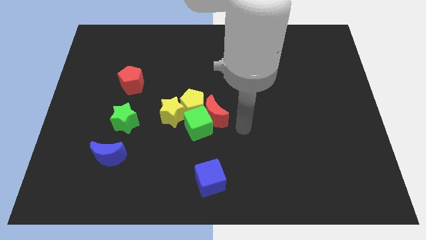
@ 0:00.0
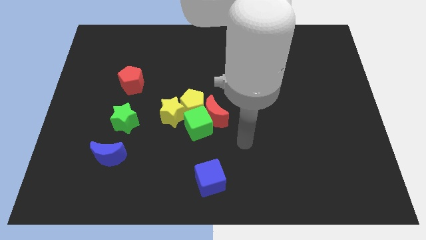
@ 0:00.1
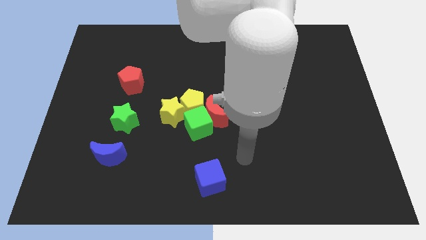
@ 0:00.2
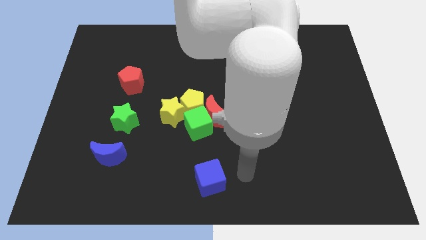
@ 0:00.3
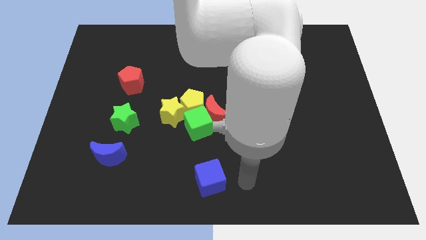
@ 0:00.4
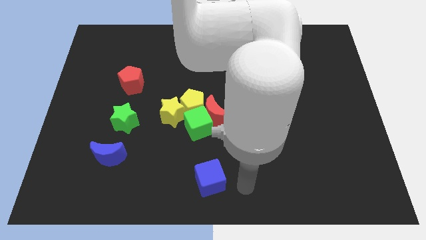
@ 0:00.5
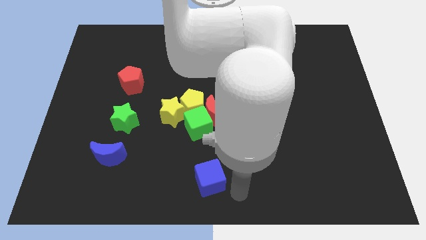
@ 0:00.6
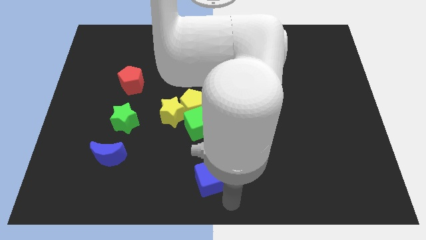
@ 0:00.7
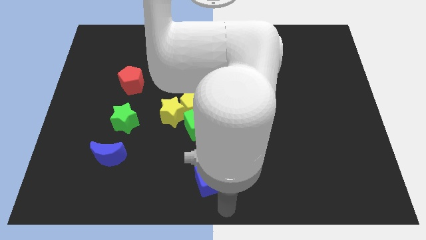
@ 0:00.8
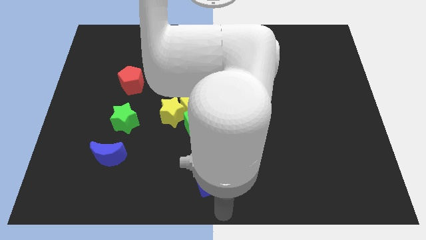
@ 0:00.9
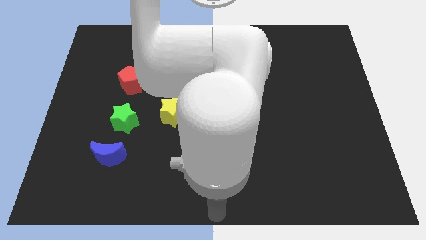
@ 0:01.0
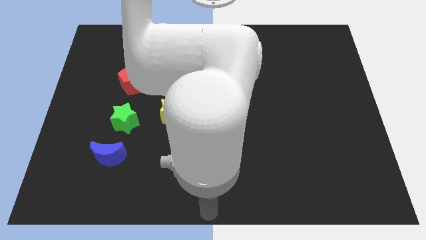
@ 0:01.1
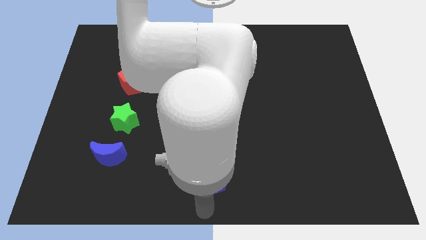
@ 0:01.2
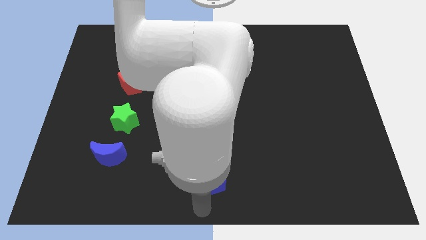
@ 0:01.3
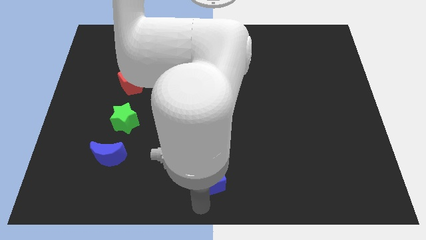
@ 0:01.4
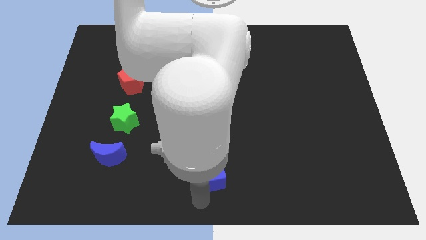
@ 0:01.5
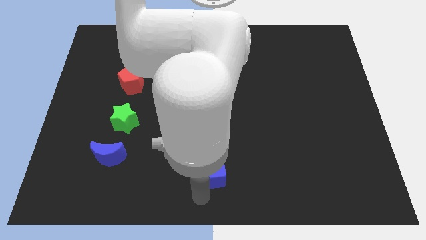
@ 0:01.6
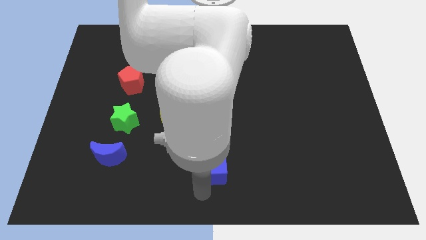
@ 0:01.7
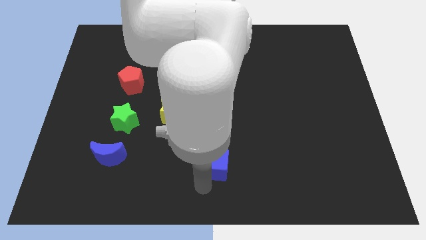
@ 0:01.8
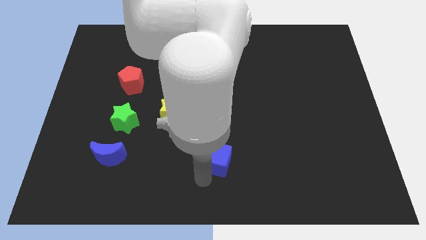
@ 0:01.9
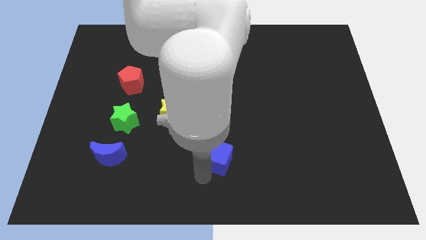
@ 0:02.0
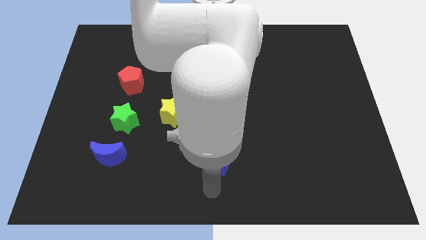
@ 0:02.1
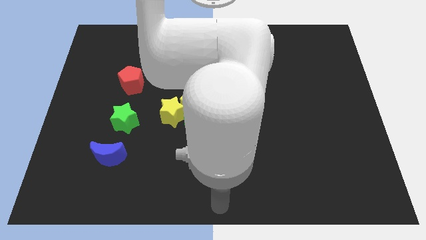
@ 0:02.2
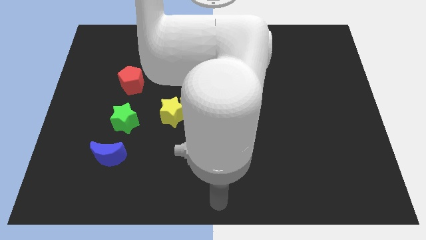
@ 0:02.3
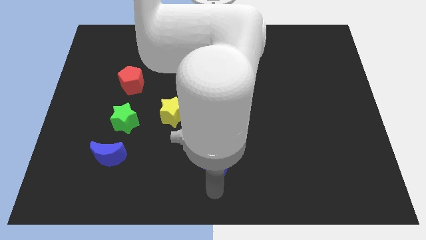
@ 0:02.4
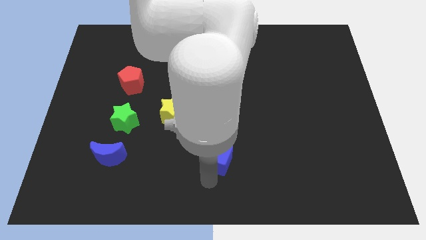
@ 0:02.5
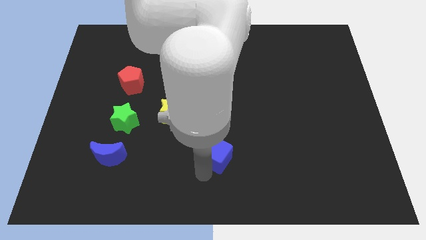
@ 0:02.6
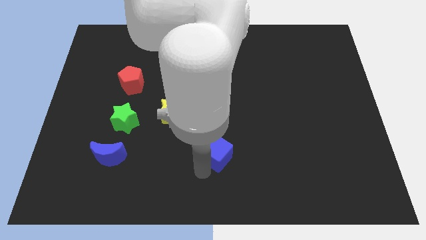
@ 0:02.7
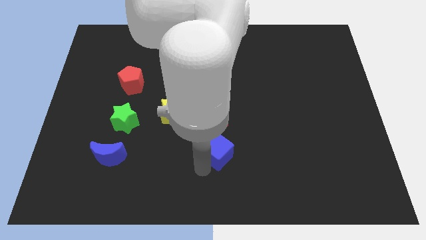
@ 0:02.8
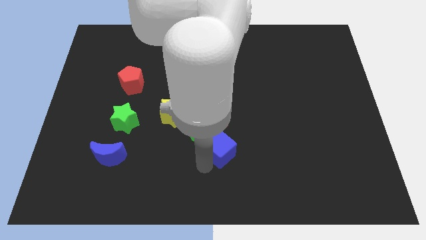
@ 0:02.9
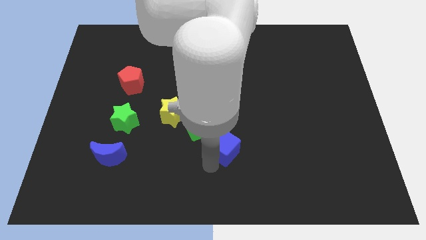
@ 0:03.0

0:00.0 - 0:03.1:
slightly push blue cube upwards

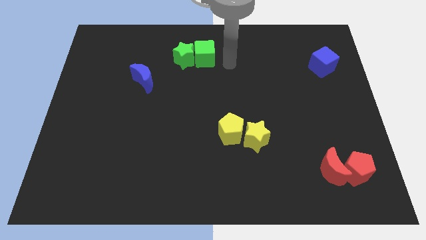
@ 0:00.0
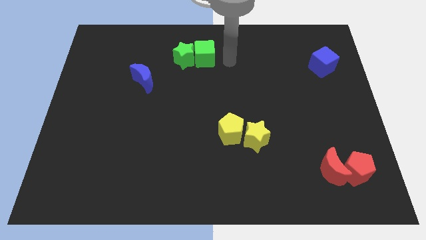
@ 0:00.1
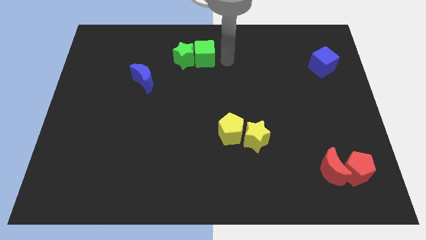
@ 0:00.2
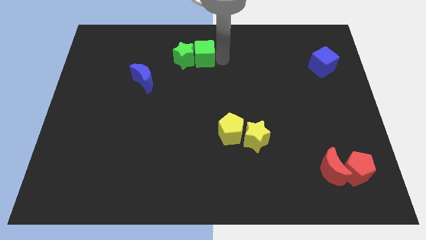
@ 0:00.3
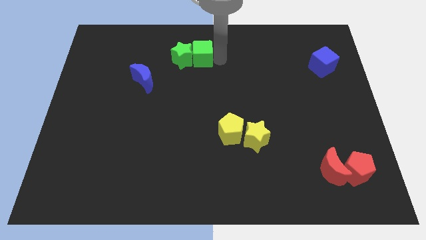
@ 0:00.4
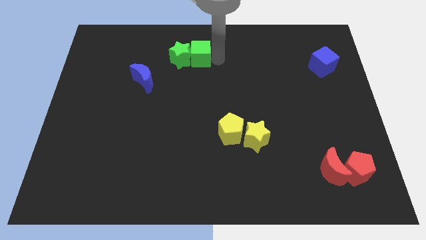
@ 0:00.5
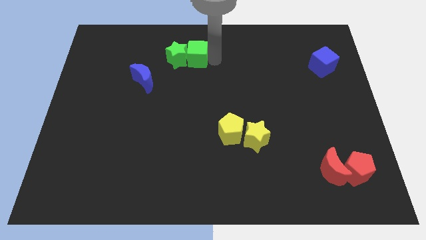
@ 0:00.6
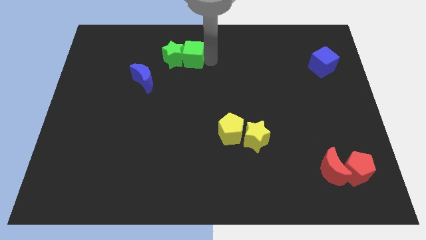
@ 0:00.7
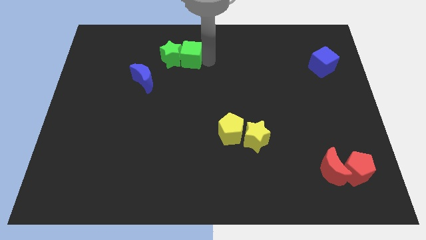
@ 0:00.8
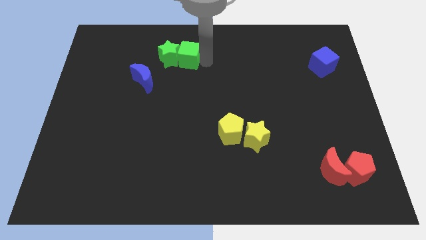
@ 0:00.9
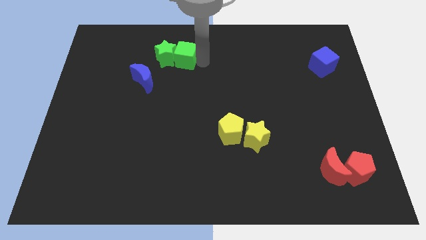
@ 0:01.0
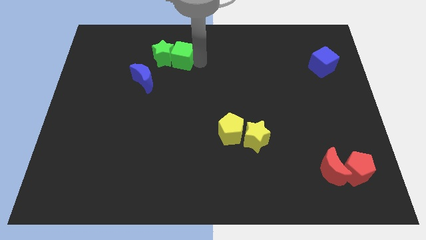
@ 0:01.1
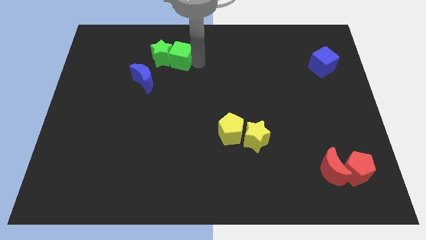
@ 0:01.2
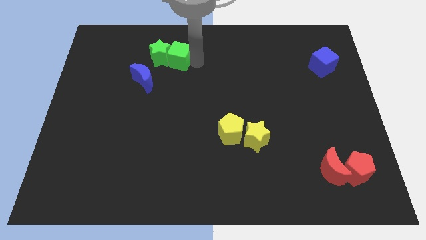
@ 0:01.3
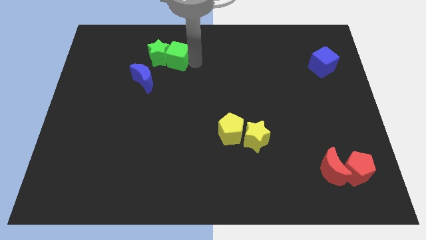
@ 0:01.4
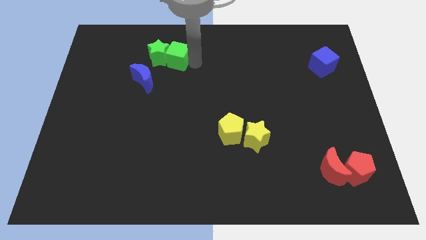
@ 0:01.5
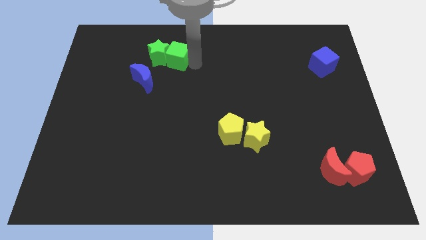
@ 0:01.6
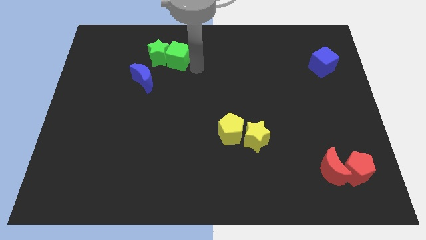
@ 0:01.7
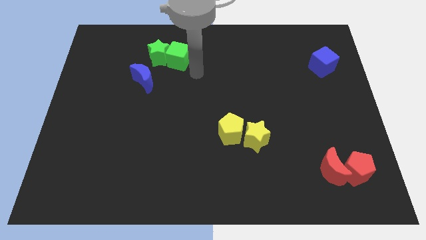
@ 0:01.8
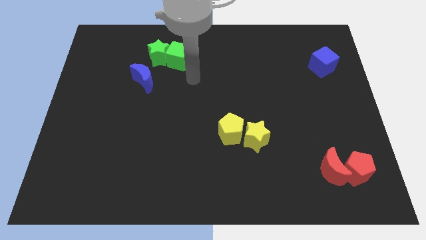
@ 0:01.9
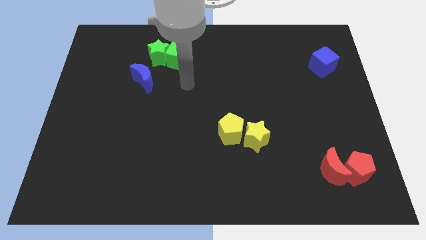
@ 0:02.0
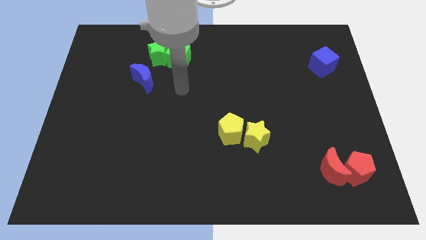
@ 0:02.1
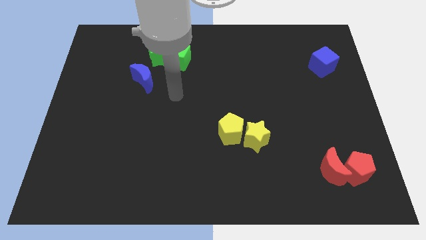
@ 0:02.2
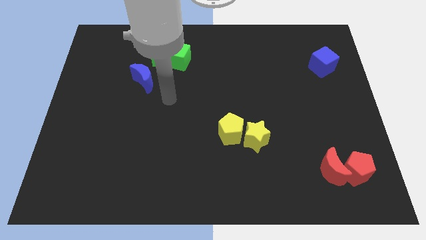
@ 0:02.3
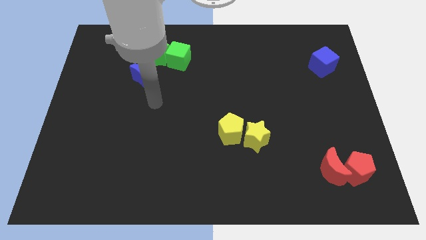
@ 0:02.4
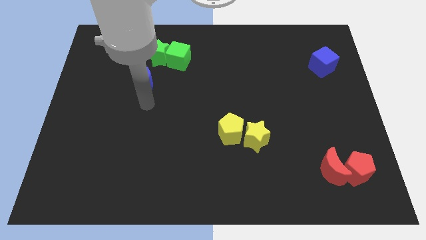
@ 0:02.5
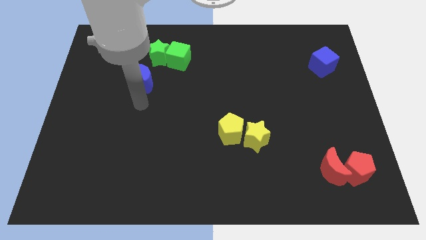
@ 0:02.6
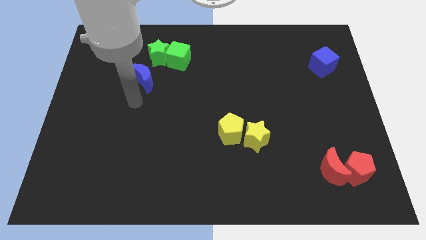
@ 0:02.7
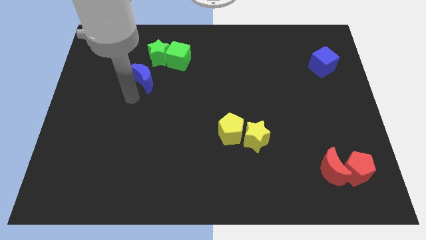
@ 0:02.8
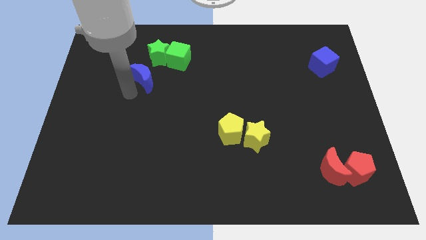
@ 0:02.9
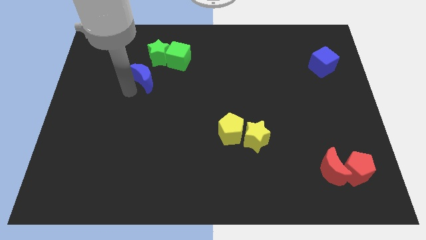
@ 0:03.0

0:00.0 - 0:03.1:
slide both the green blocks diagonally on the top right side of the blue moon

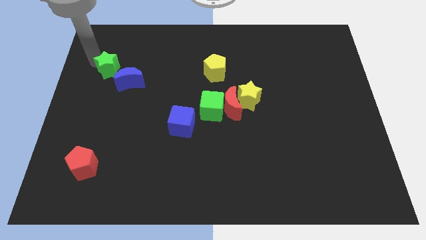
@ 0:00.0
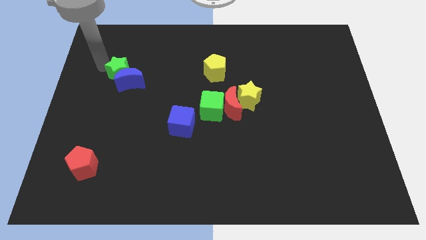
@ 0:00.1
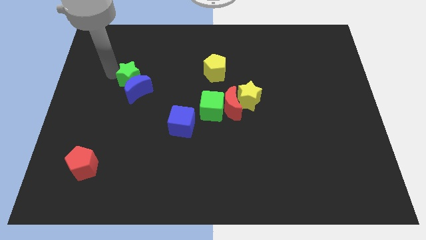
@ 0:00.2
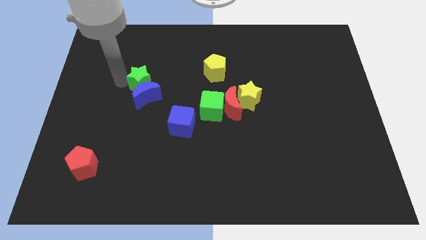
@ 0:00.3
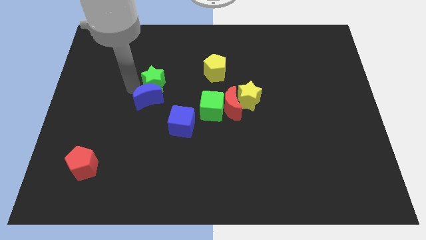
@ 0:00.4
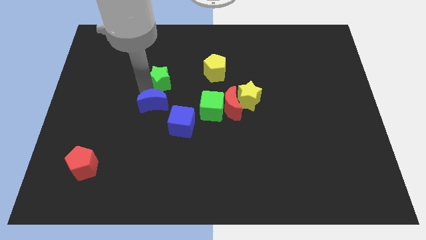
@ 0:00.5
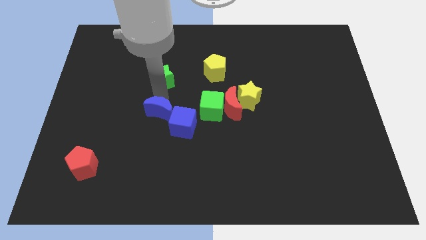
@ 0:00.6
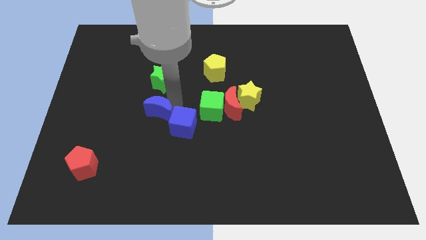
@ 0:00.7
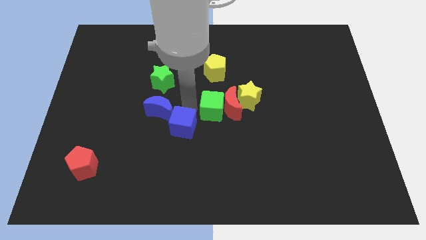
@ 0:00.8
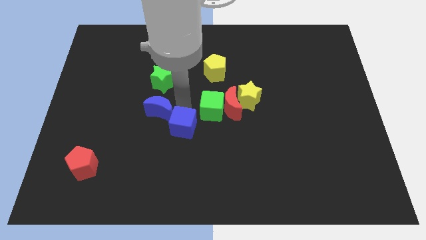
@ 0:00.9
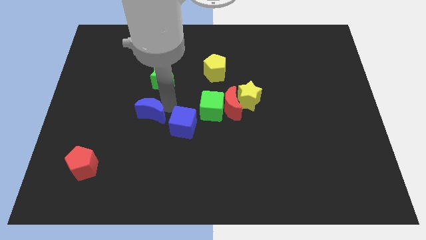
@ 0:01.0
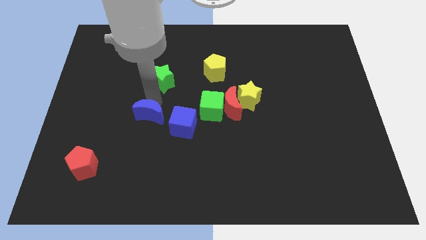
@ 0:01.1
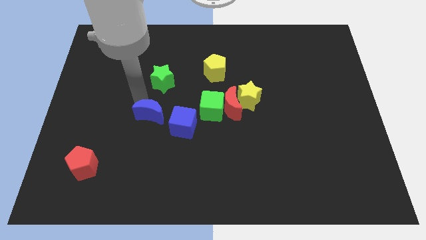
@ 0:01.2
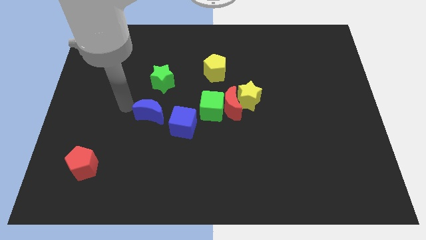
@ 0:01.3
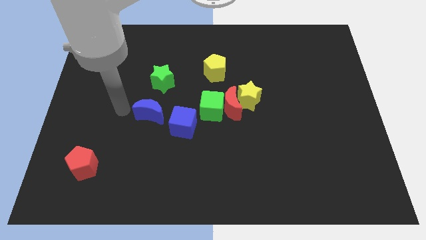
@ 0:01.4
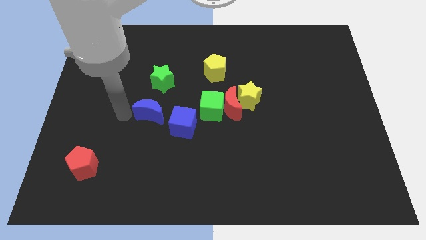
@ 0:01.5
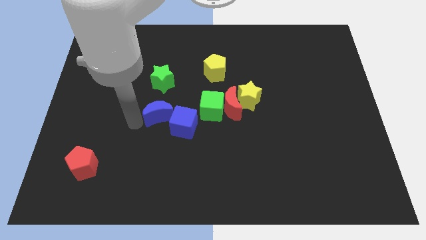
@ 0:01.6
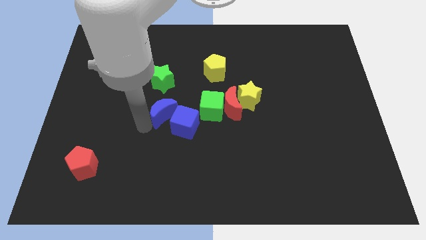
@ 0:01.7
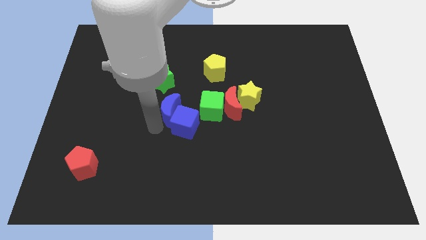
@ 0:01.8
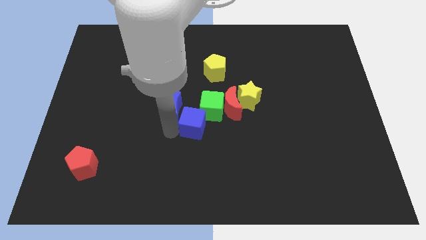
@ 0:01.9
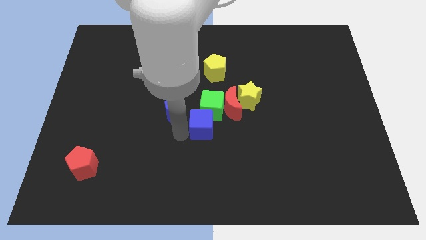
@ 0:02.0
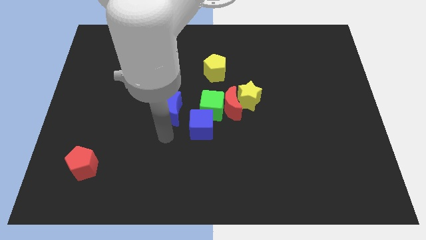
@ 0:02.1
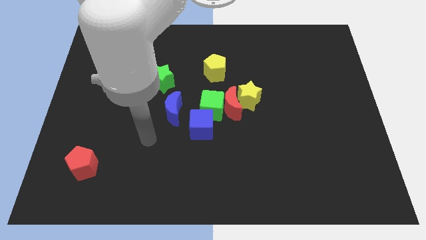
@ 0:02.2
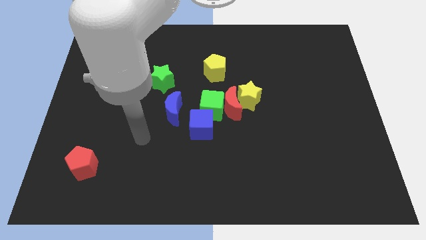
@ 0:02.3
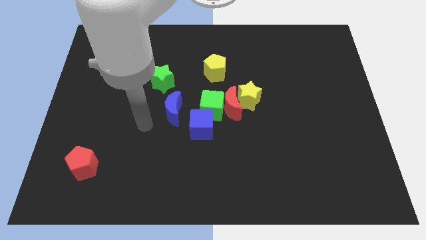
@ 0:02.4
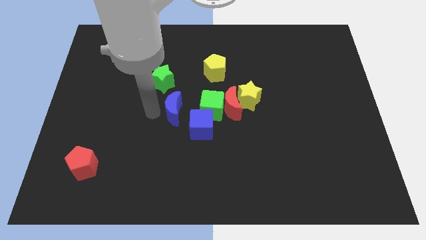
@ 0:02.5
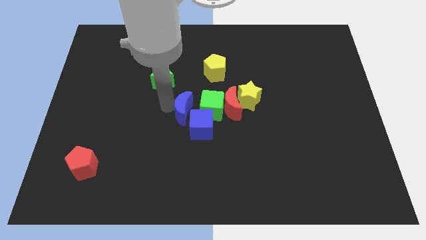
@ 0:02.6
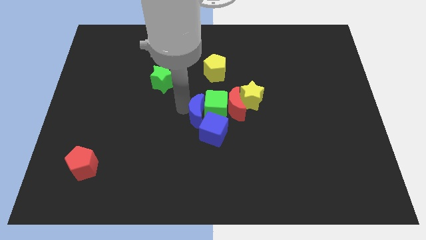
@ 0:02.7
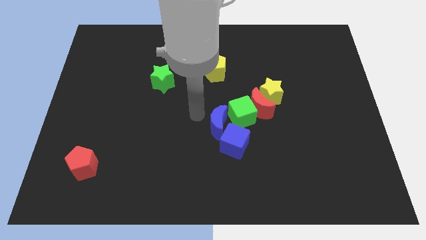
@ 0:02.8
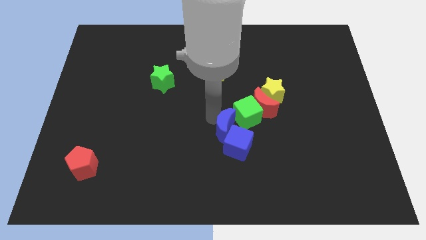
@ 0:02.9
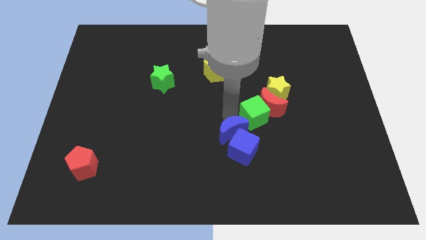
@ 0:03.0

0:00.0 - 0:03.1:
slide the blue moon into the blue cube
